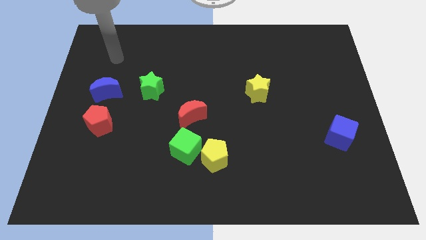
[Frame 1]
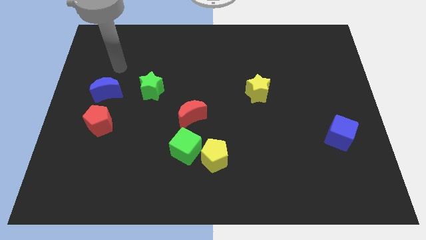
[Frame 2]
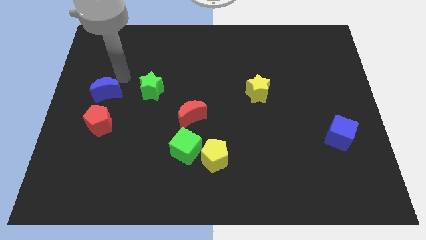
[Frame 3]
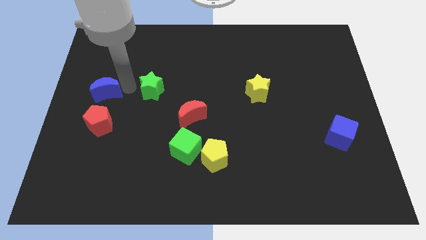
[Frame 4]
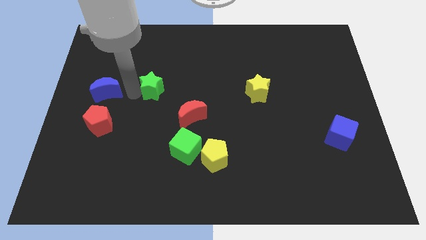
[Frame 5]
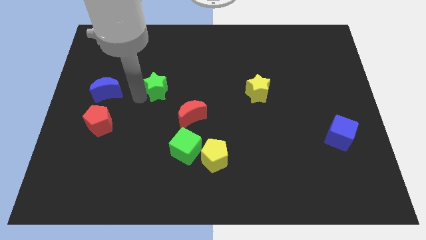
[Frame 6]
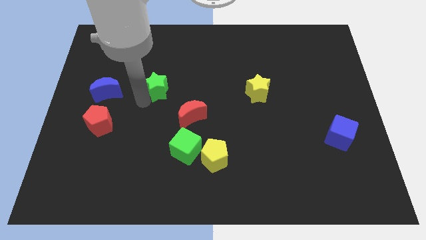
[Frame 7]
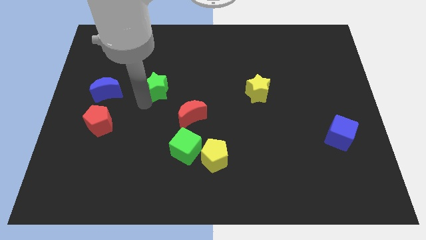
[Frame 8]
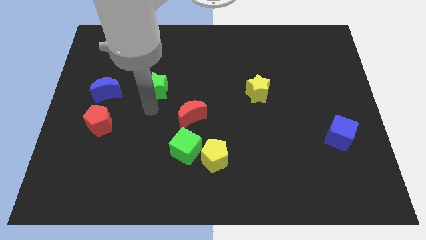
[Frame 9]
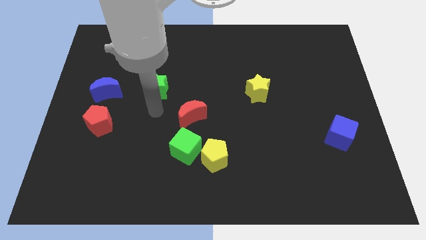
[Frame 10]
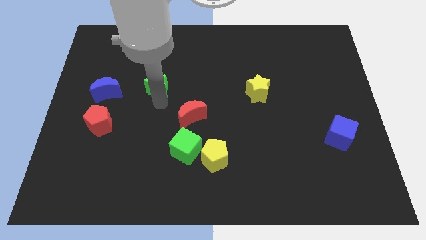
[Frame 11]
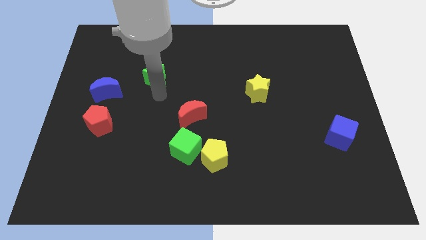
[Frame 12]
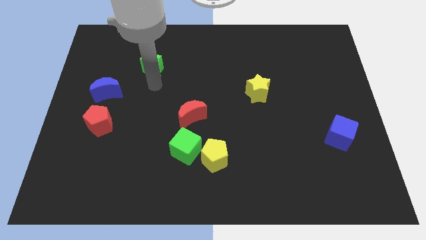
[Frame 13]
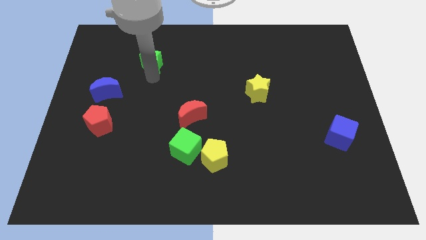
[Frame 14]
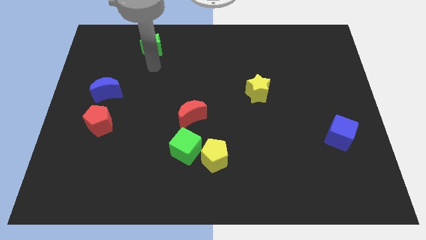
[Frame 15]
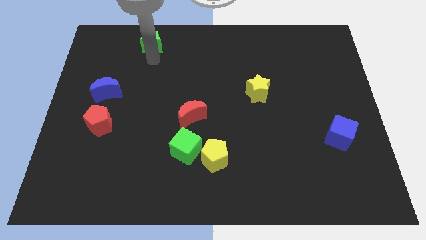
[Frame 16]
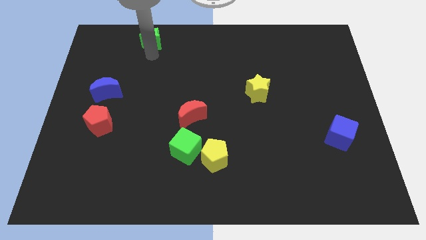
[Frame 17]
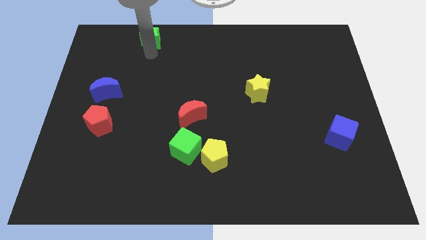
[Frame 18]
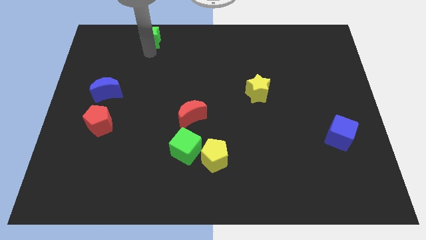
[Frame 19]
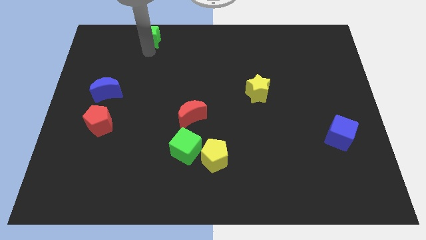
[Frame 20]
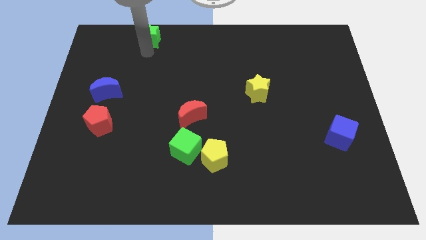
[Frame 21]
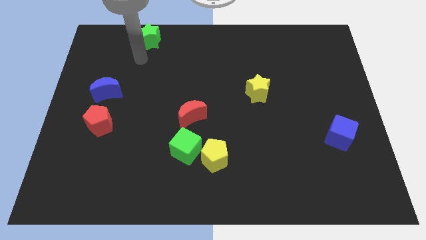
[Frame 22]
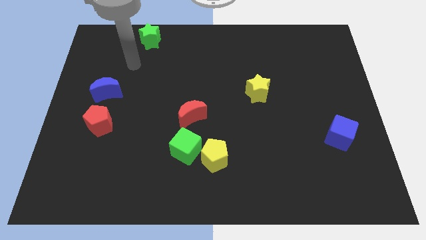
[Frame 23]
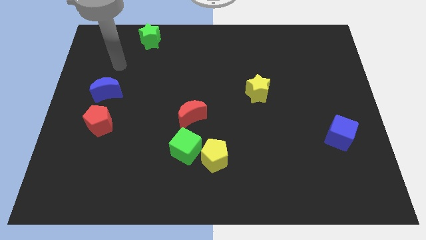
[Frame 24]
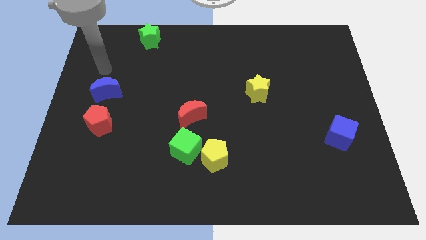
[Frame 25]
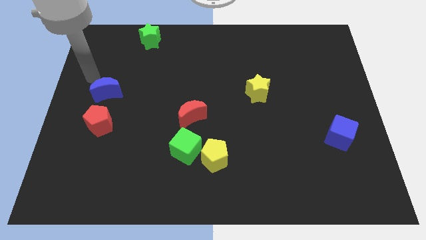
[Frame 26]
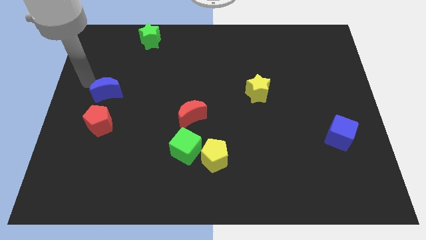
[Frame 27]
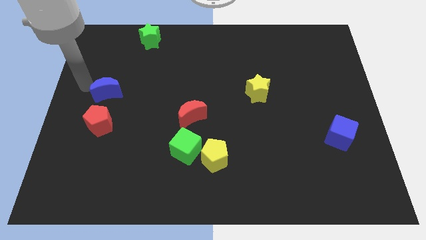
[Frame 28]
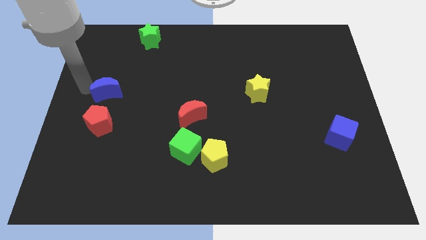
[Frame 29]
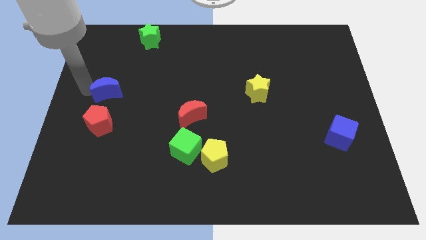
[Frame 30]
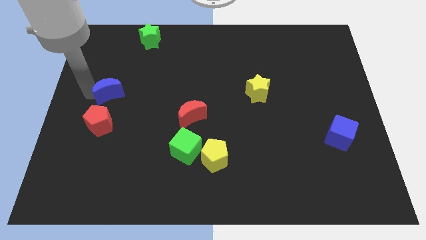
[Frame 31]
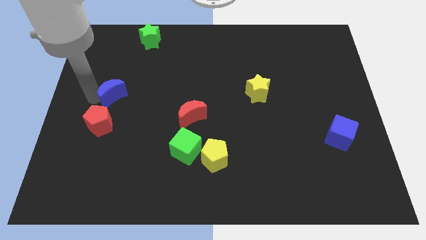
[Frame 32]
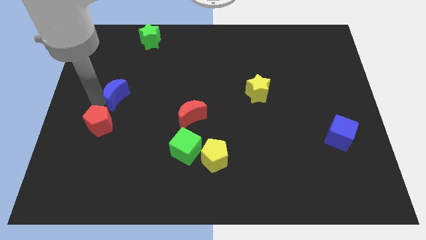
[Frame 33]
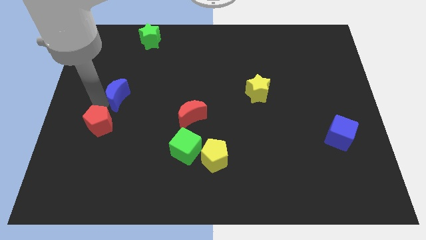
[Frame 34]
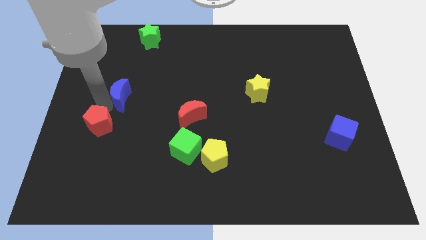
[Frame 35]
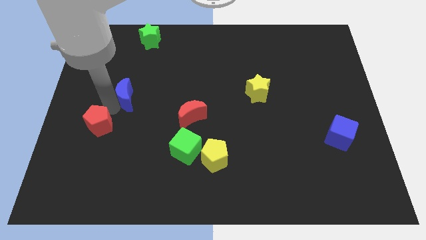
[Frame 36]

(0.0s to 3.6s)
slide the green star to the top side

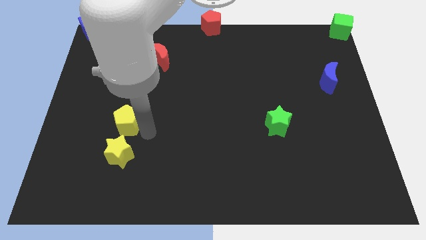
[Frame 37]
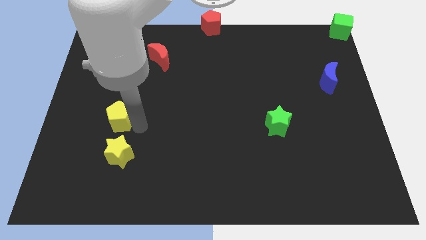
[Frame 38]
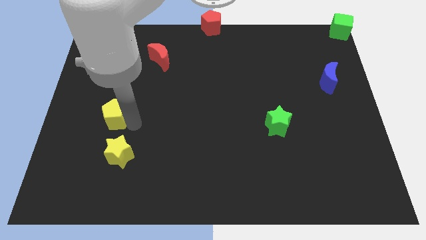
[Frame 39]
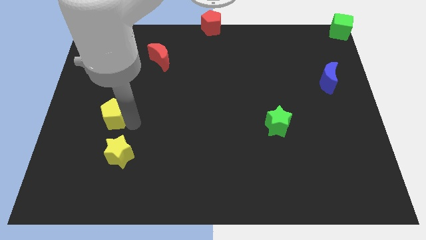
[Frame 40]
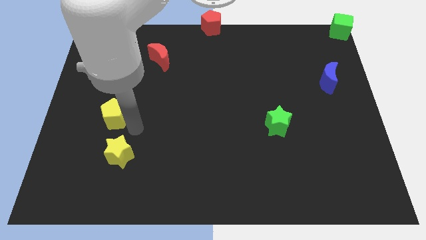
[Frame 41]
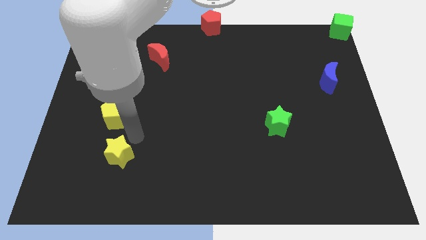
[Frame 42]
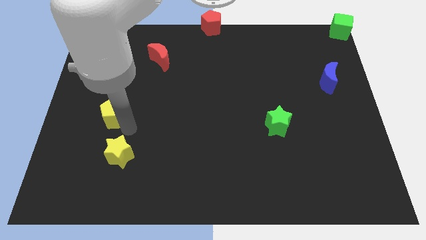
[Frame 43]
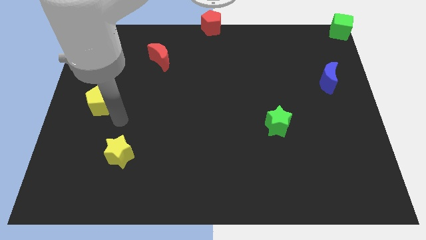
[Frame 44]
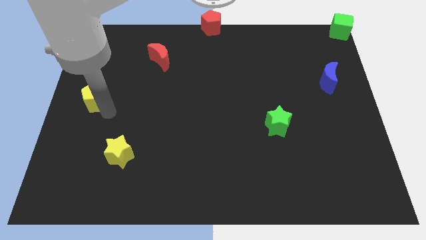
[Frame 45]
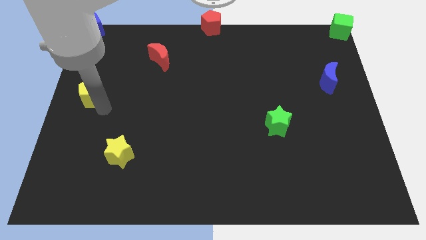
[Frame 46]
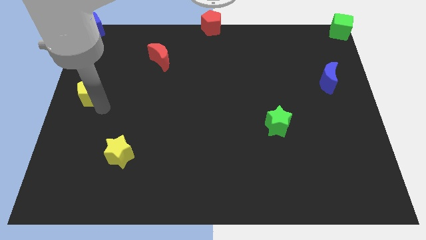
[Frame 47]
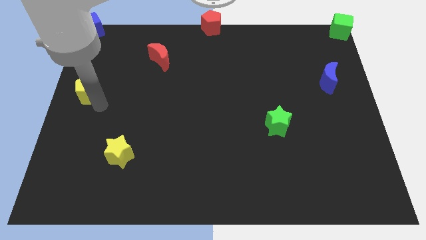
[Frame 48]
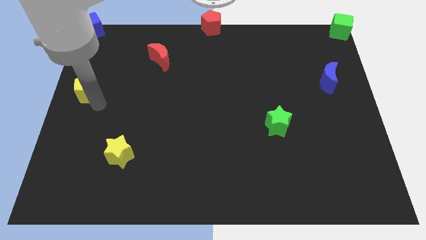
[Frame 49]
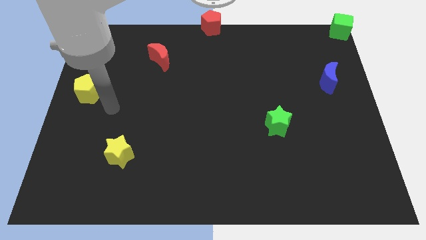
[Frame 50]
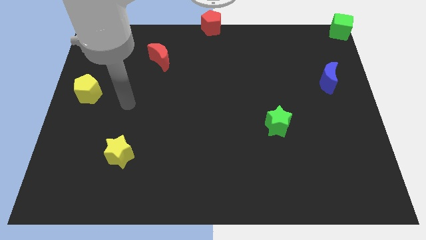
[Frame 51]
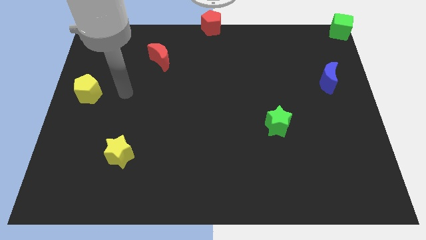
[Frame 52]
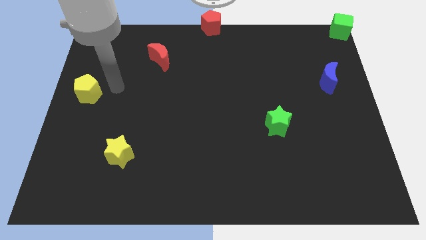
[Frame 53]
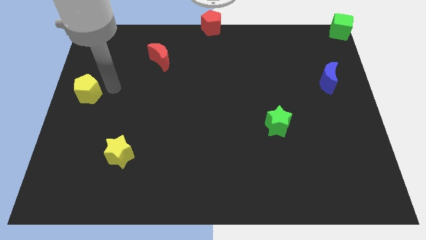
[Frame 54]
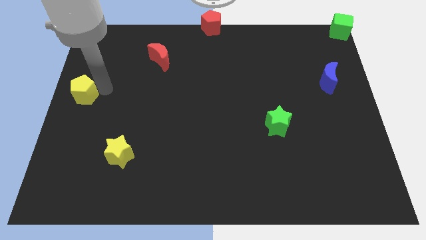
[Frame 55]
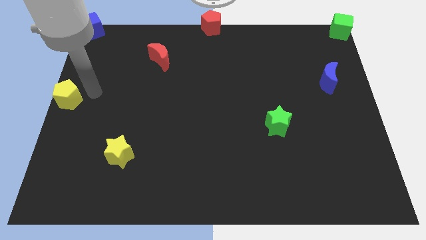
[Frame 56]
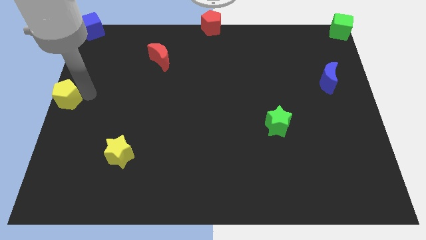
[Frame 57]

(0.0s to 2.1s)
place the yellow penatgon to left center of the board

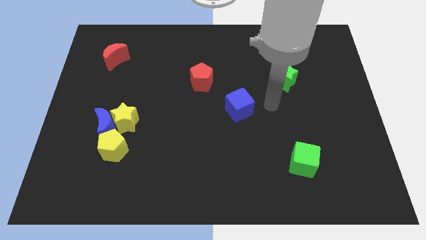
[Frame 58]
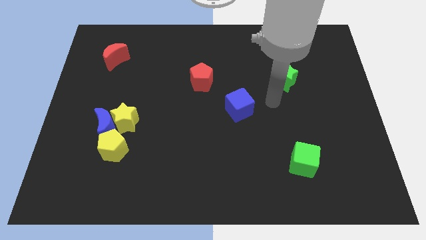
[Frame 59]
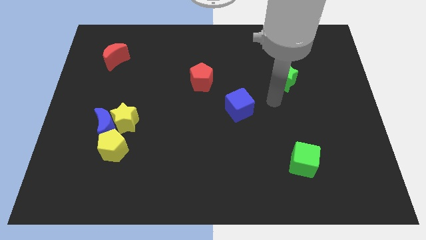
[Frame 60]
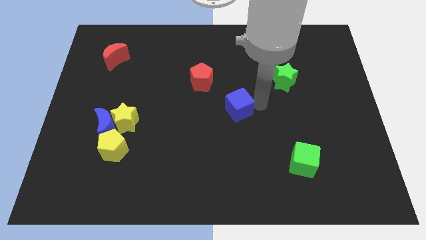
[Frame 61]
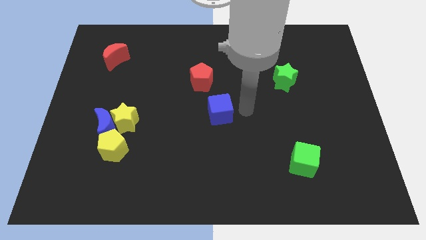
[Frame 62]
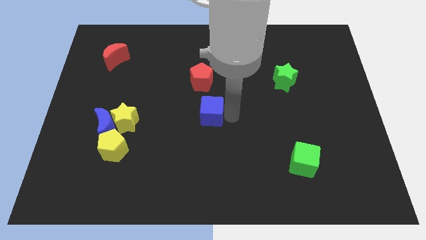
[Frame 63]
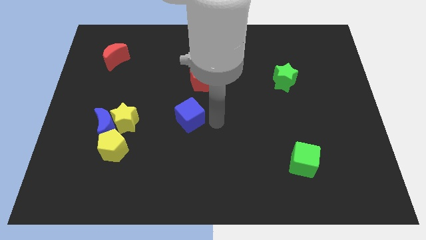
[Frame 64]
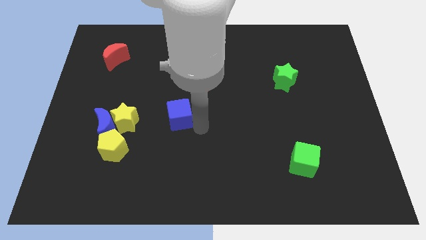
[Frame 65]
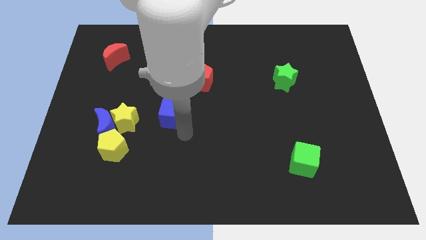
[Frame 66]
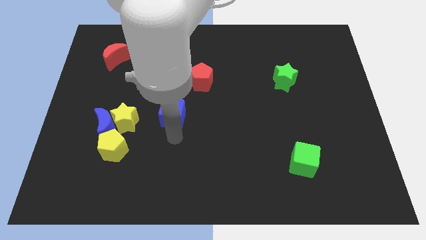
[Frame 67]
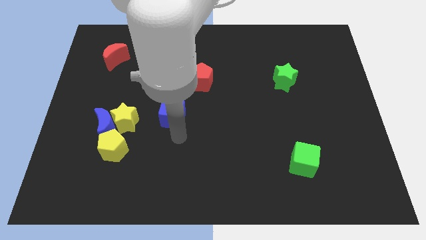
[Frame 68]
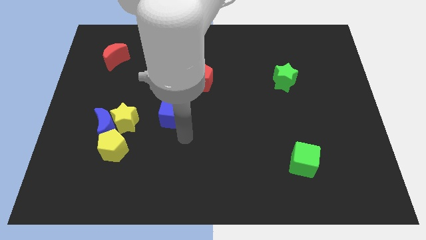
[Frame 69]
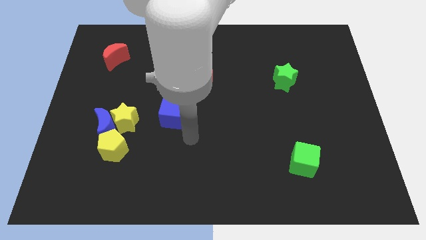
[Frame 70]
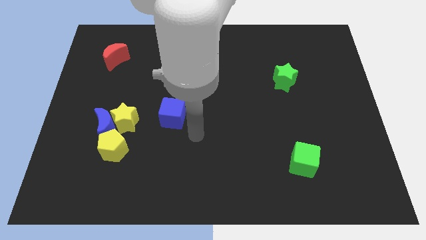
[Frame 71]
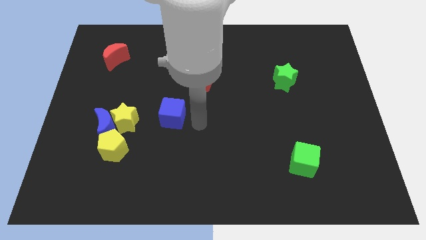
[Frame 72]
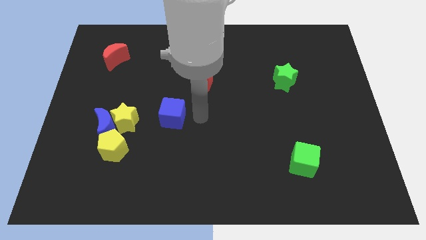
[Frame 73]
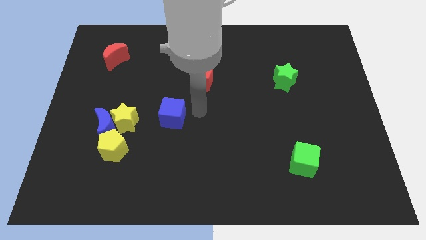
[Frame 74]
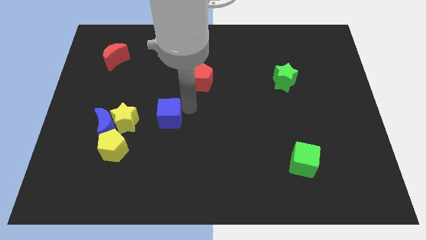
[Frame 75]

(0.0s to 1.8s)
place blue cube to the right of yellow star

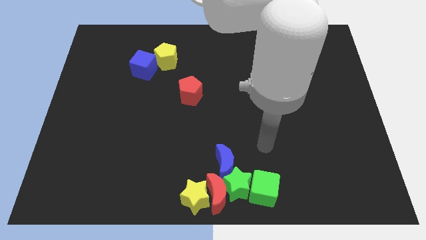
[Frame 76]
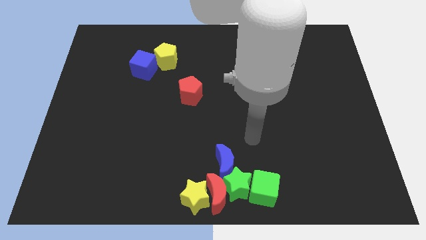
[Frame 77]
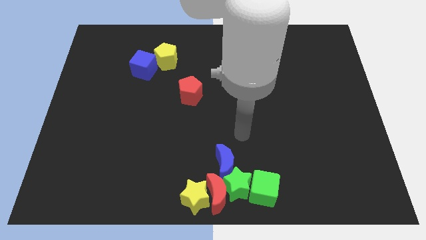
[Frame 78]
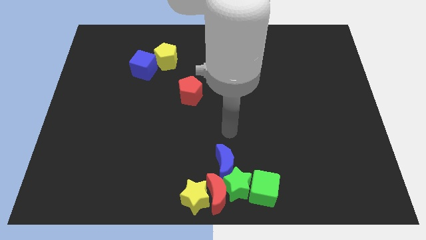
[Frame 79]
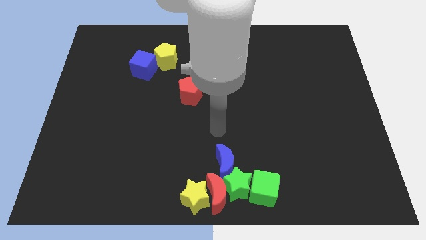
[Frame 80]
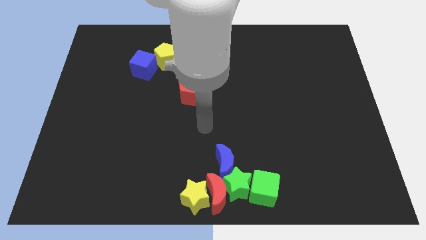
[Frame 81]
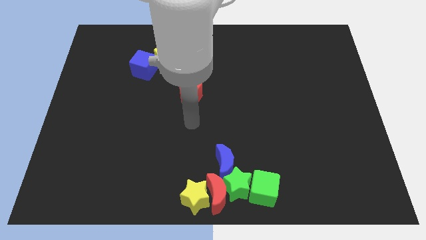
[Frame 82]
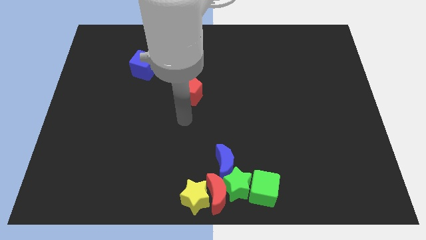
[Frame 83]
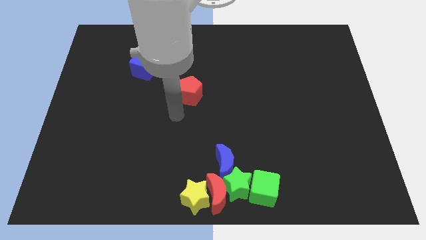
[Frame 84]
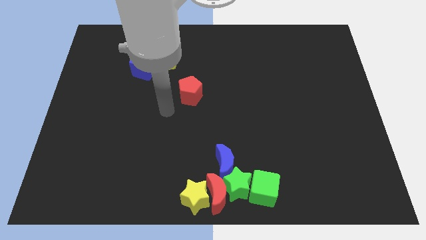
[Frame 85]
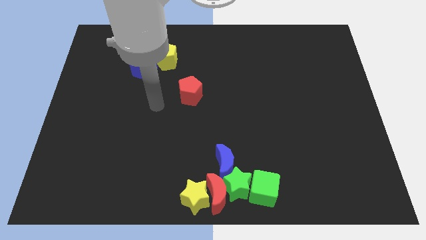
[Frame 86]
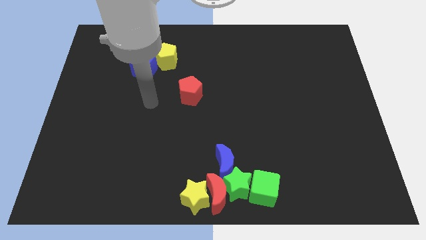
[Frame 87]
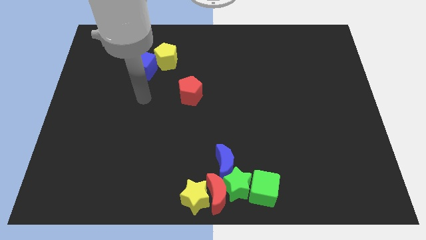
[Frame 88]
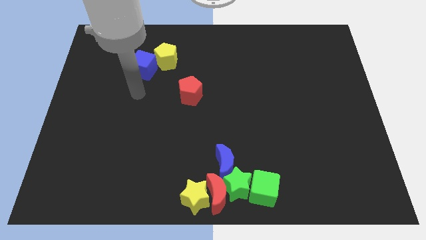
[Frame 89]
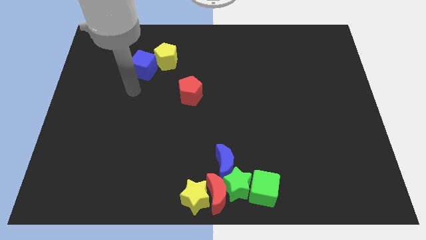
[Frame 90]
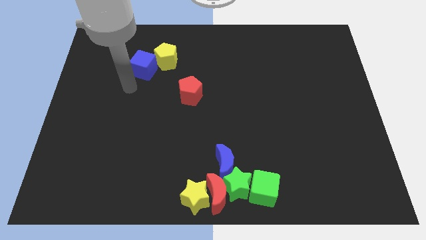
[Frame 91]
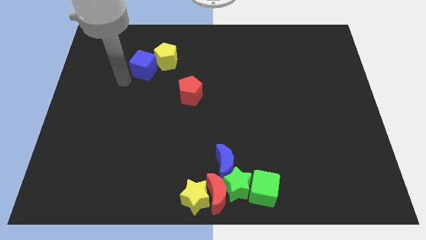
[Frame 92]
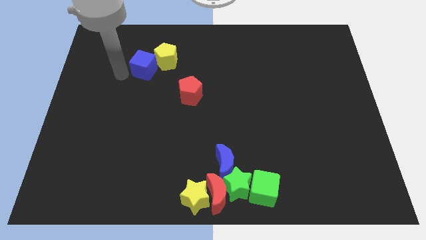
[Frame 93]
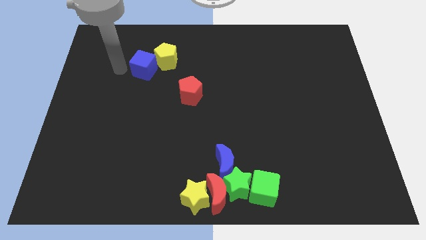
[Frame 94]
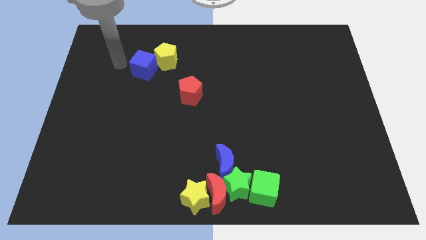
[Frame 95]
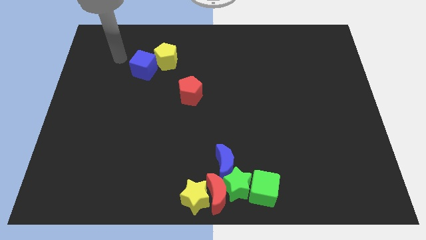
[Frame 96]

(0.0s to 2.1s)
move your arm to the left side of the blue cube
